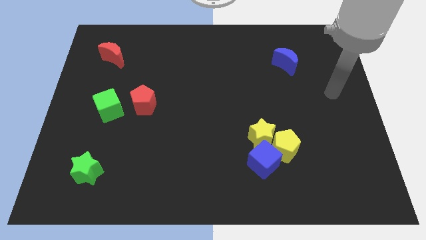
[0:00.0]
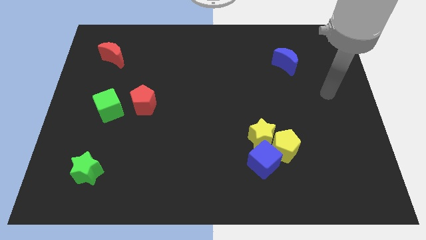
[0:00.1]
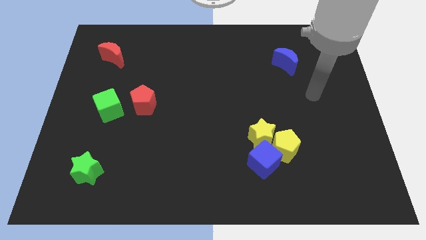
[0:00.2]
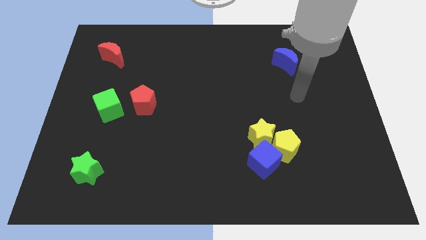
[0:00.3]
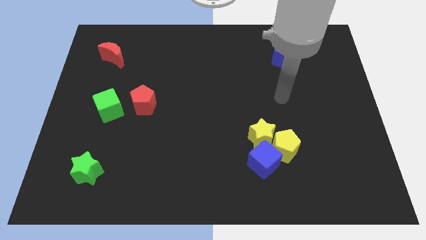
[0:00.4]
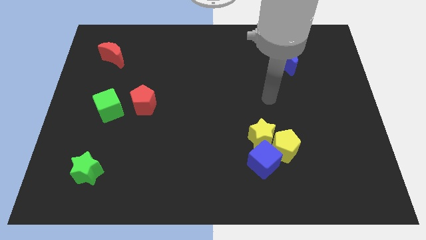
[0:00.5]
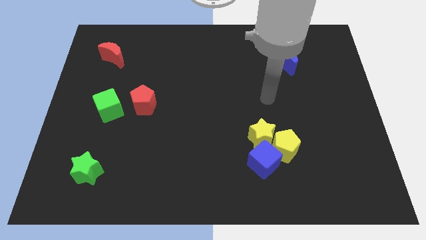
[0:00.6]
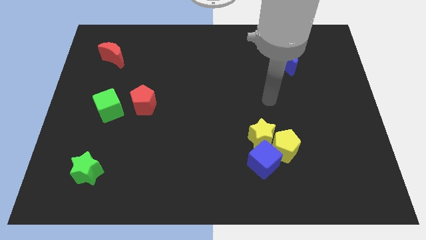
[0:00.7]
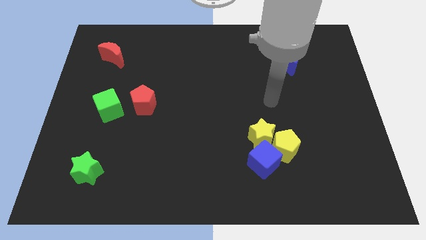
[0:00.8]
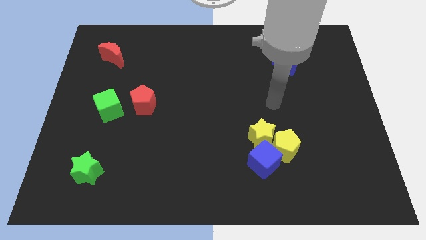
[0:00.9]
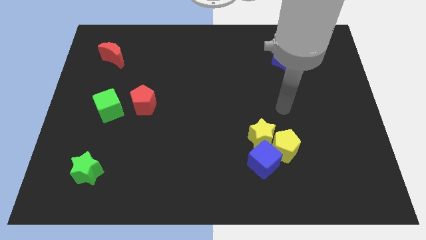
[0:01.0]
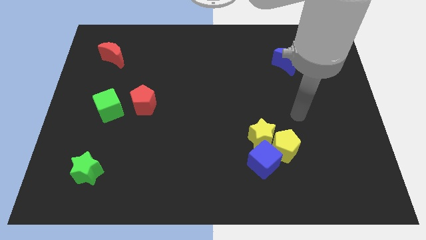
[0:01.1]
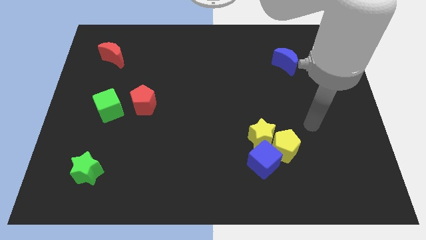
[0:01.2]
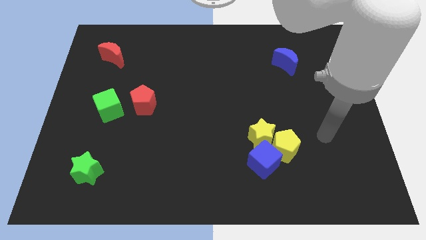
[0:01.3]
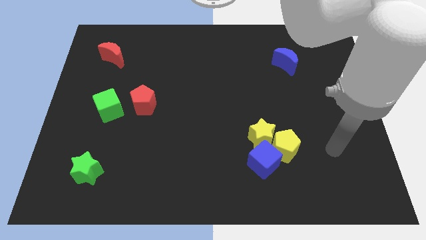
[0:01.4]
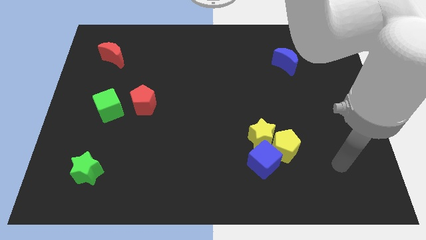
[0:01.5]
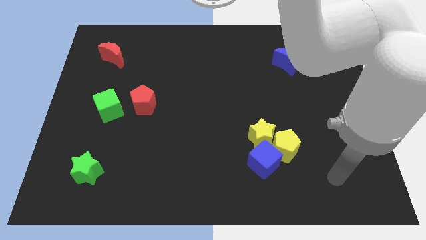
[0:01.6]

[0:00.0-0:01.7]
slide your arm towards the bottom right

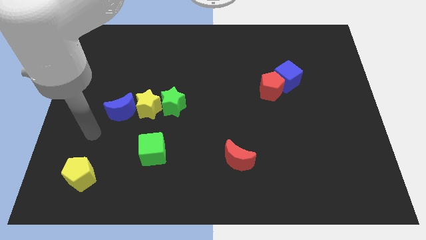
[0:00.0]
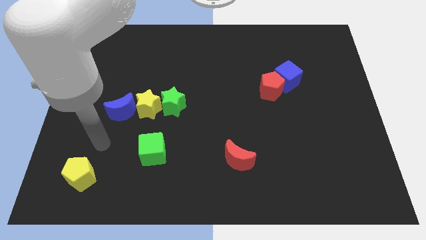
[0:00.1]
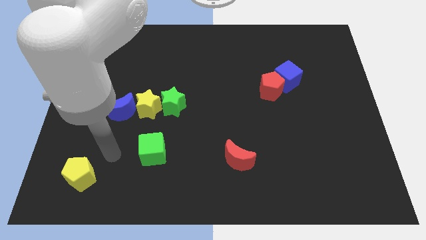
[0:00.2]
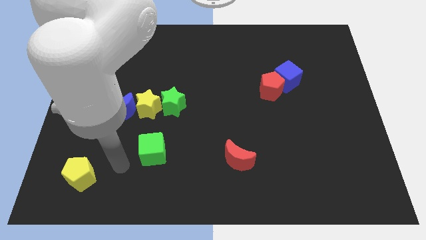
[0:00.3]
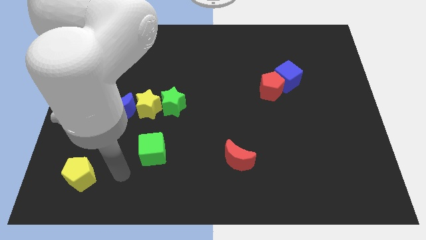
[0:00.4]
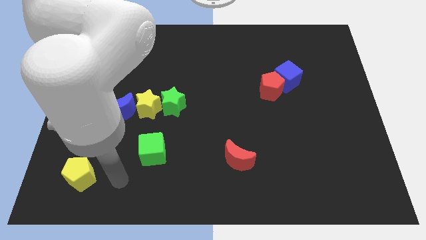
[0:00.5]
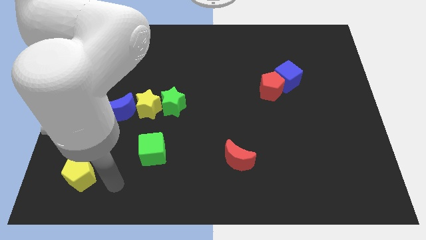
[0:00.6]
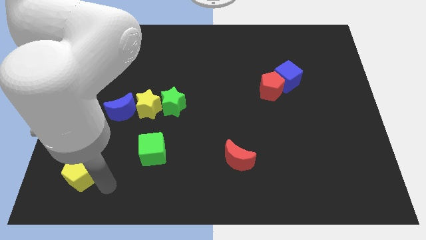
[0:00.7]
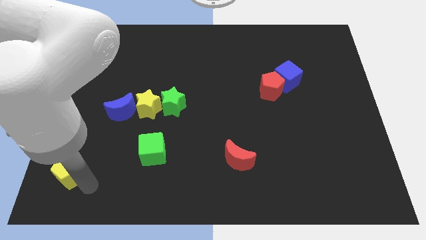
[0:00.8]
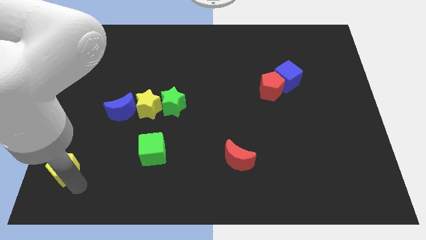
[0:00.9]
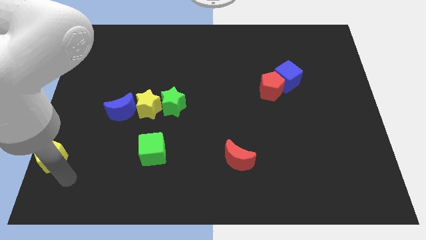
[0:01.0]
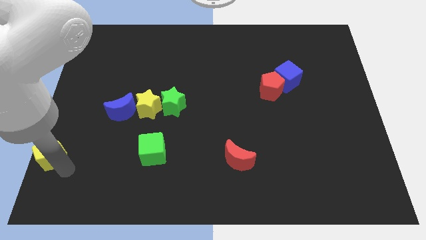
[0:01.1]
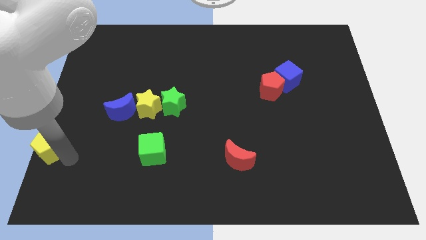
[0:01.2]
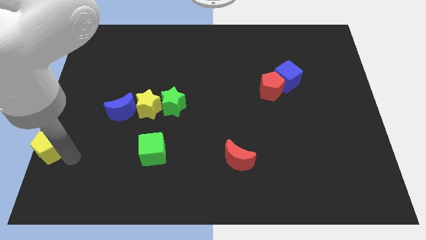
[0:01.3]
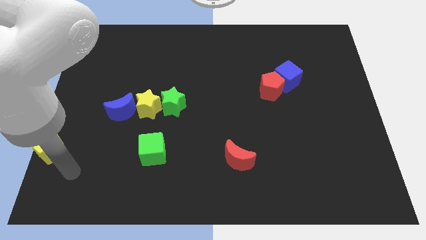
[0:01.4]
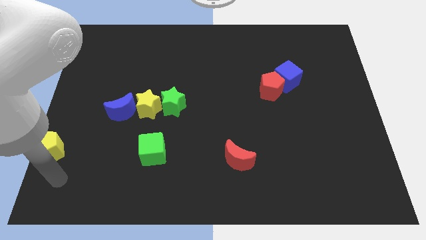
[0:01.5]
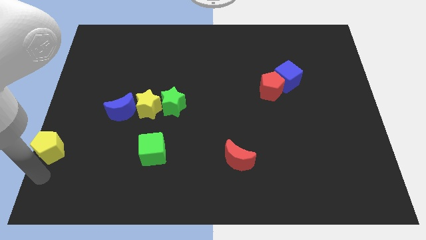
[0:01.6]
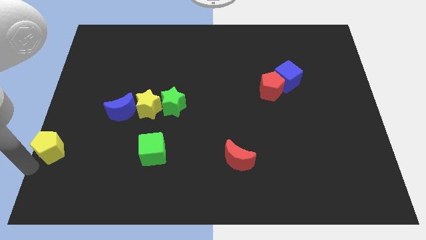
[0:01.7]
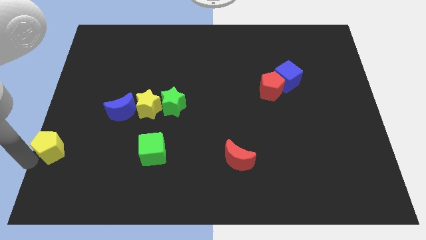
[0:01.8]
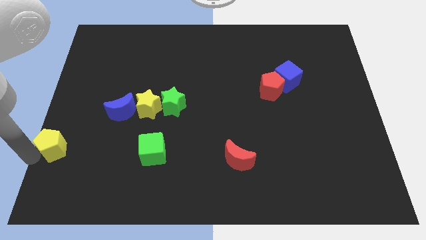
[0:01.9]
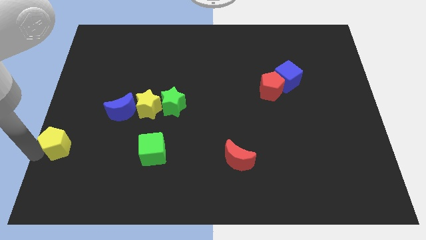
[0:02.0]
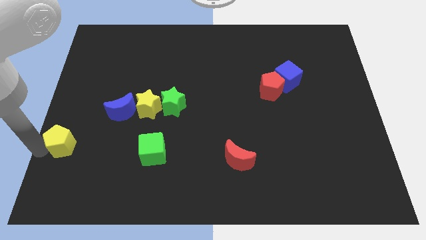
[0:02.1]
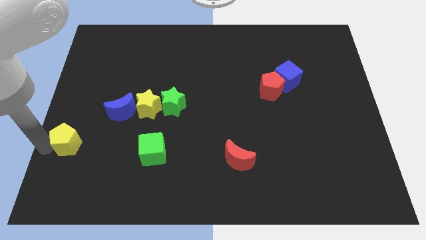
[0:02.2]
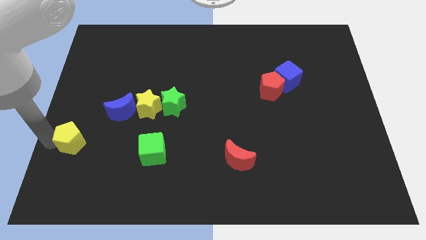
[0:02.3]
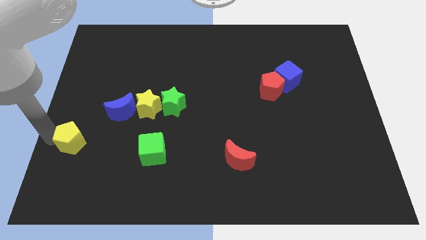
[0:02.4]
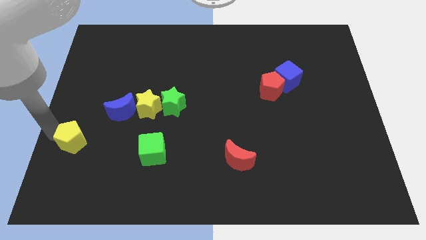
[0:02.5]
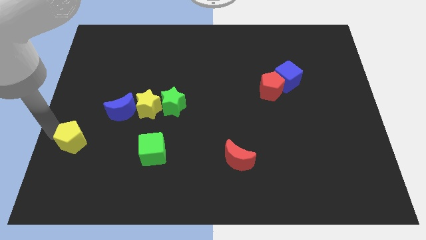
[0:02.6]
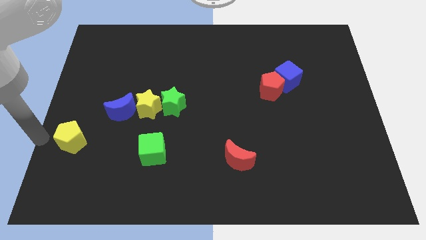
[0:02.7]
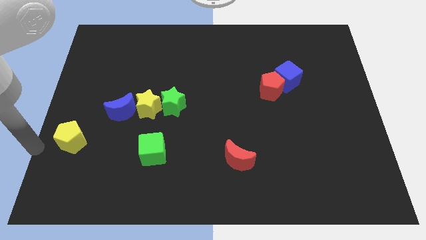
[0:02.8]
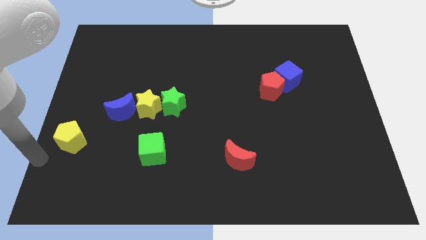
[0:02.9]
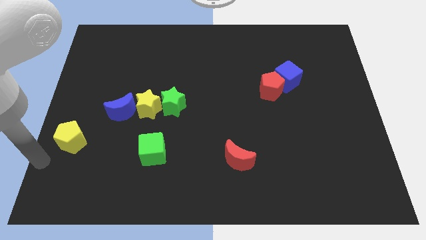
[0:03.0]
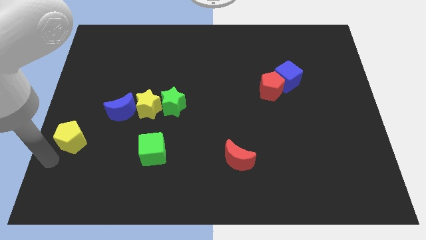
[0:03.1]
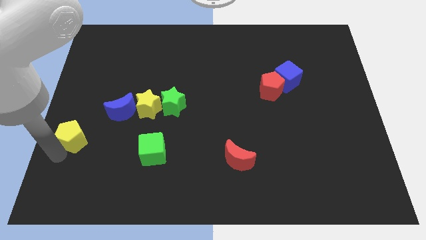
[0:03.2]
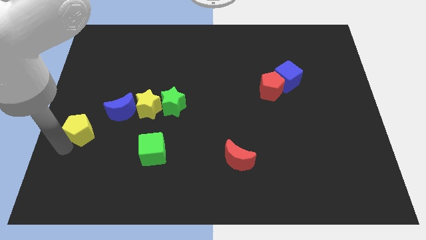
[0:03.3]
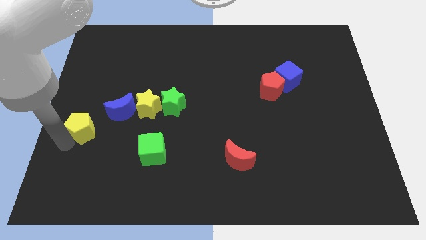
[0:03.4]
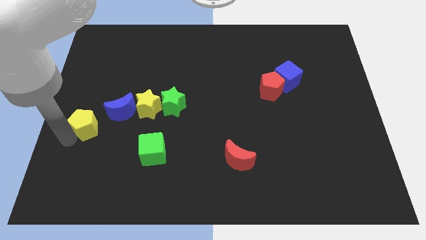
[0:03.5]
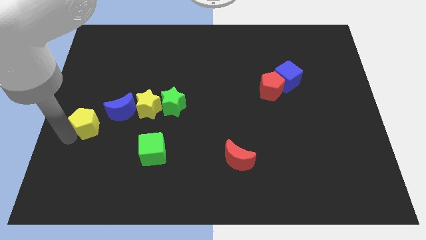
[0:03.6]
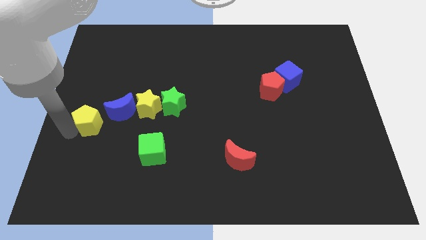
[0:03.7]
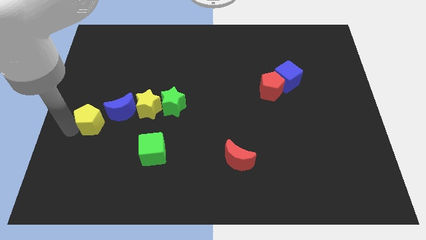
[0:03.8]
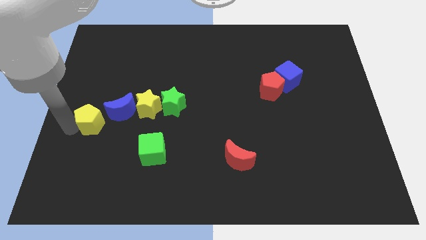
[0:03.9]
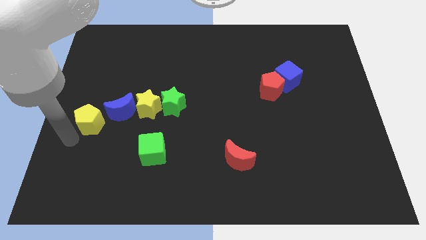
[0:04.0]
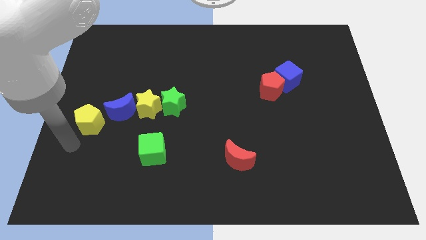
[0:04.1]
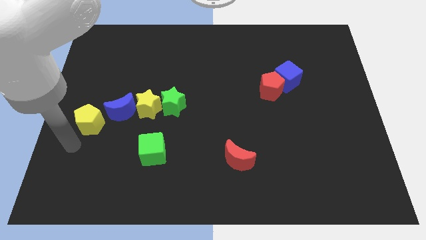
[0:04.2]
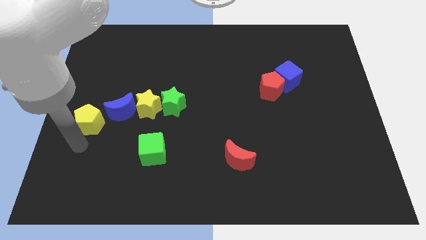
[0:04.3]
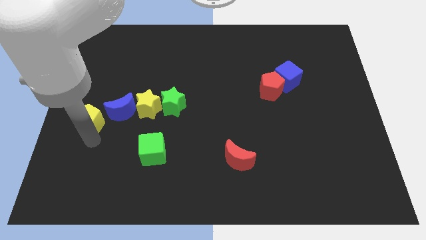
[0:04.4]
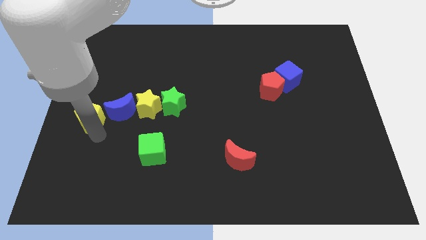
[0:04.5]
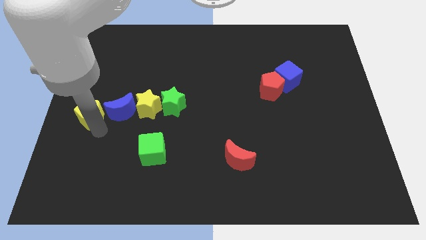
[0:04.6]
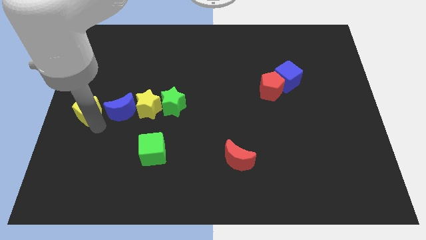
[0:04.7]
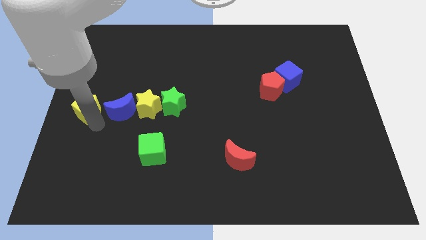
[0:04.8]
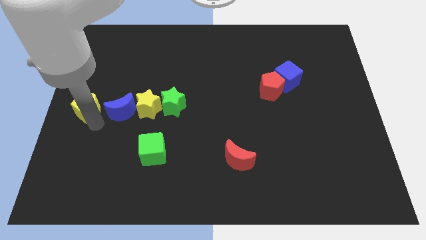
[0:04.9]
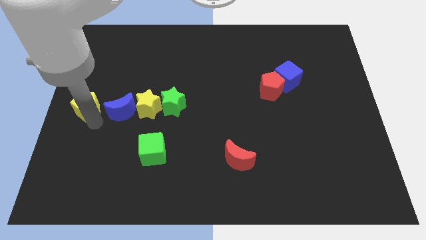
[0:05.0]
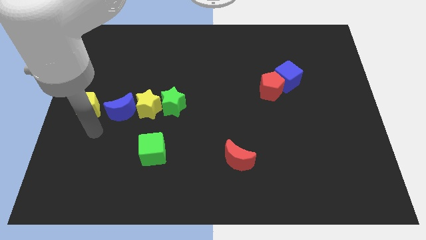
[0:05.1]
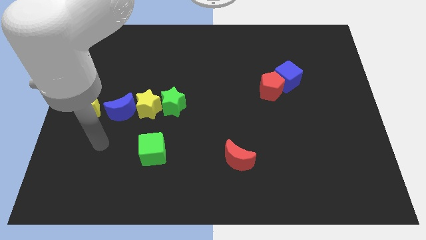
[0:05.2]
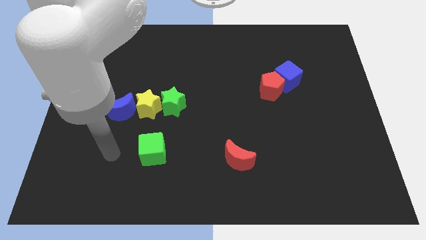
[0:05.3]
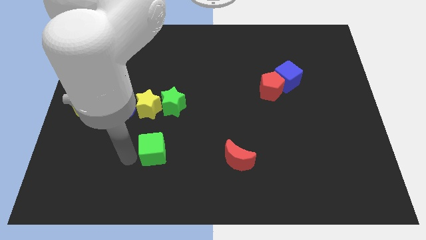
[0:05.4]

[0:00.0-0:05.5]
place the yellow pentagon beside the blue moon

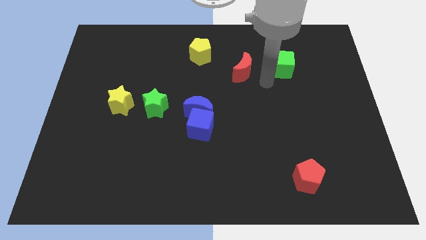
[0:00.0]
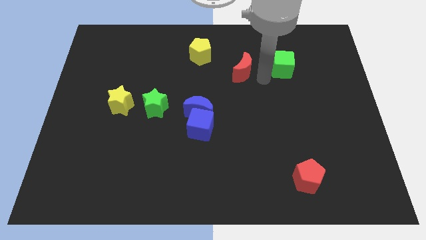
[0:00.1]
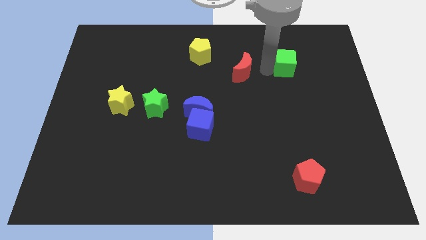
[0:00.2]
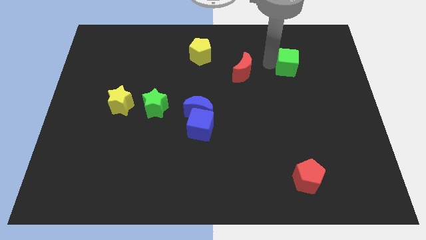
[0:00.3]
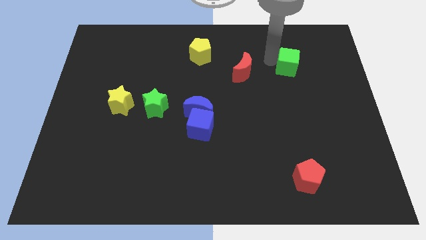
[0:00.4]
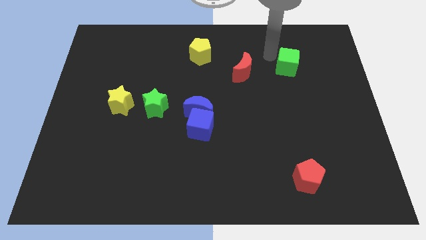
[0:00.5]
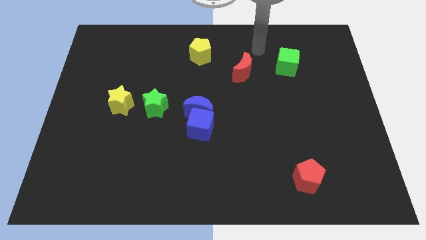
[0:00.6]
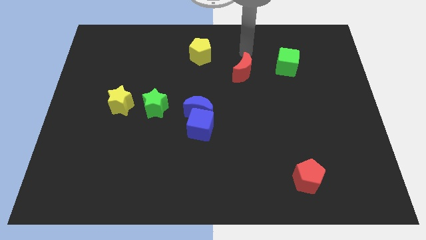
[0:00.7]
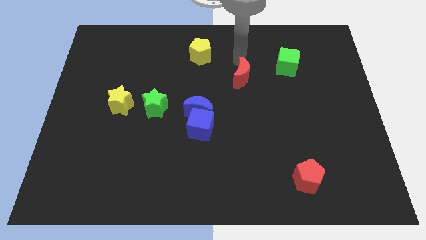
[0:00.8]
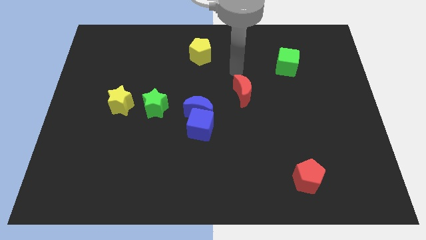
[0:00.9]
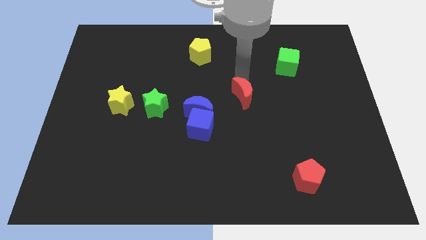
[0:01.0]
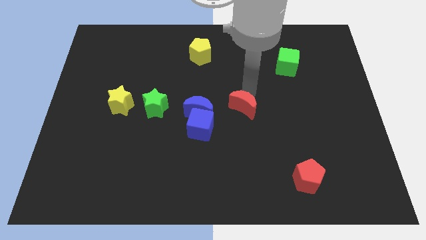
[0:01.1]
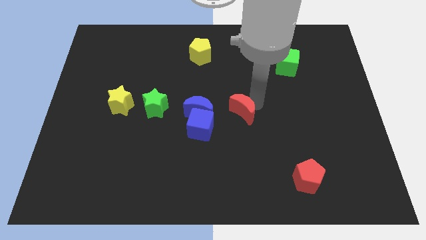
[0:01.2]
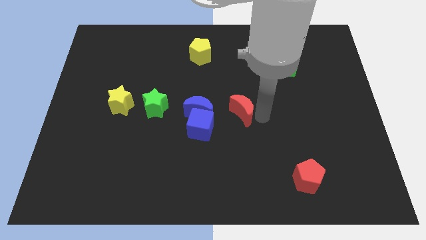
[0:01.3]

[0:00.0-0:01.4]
bring the red crescent at the right side of the blue things

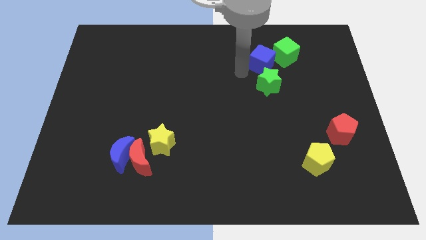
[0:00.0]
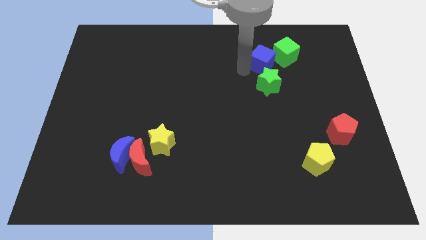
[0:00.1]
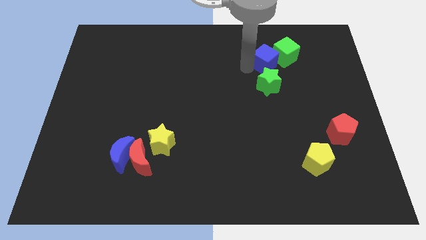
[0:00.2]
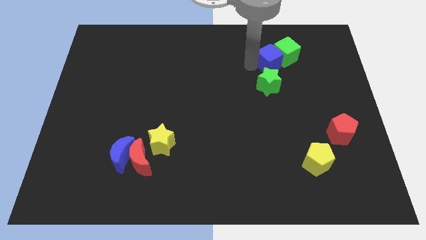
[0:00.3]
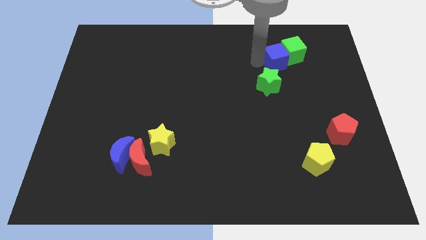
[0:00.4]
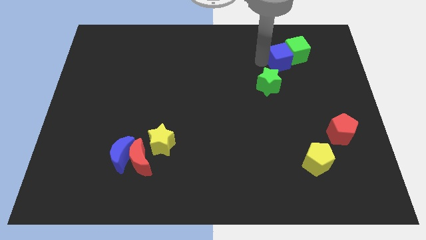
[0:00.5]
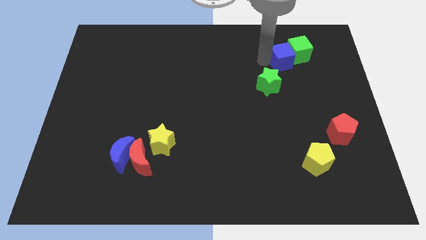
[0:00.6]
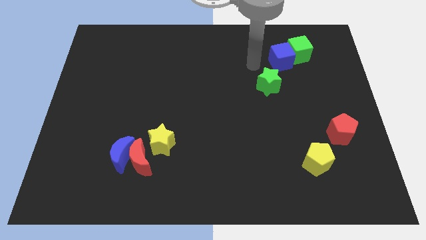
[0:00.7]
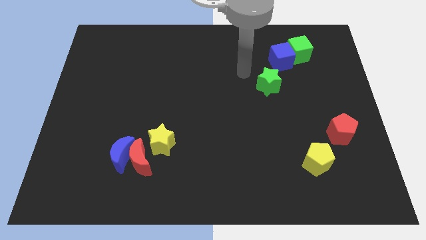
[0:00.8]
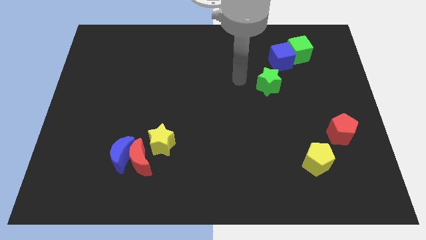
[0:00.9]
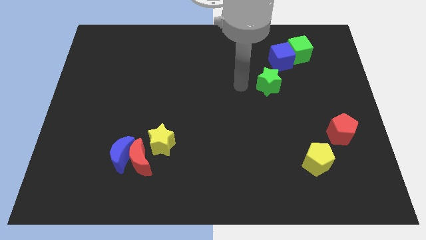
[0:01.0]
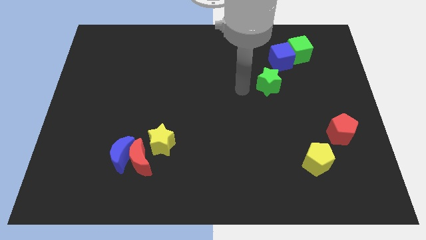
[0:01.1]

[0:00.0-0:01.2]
push the blue cube into the green cube
